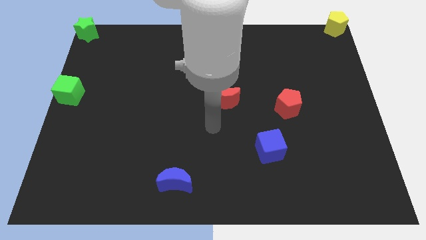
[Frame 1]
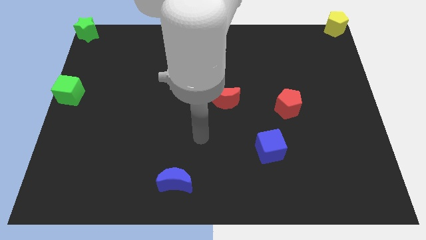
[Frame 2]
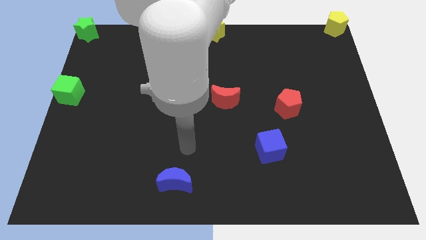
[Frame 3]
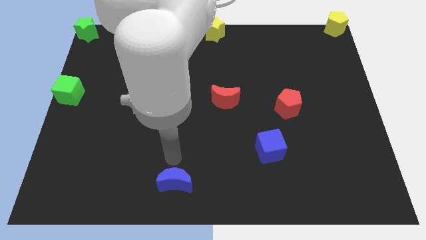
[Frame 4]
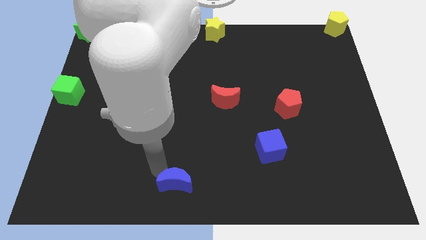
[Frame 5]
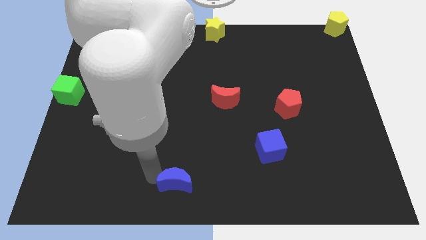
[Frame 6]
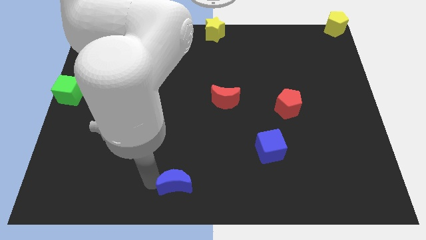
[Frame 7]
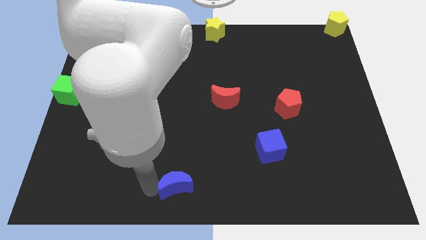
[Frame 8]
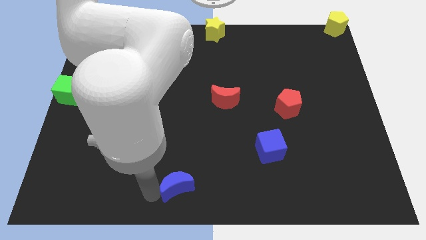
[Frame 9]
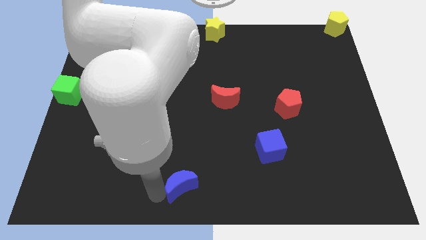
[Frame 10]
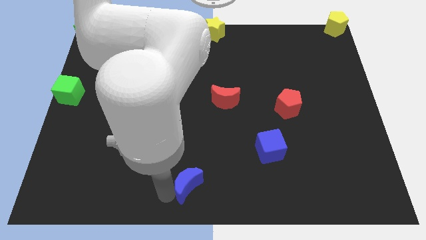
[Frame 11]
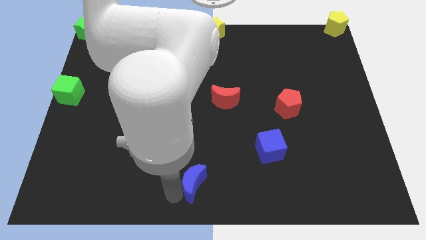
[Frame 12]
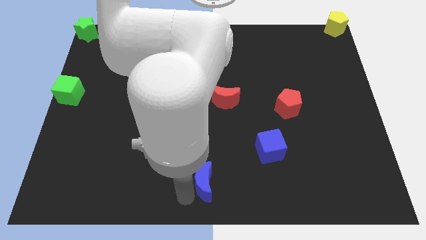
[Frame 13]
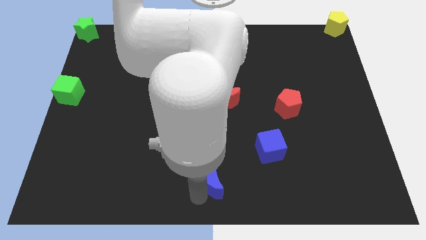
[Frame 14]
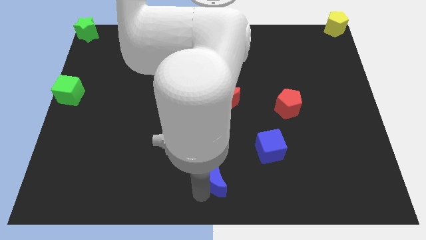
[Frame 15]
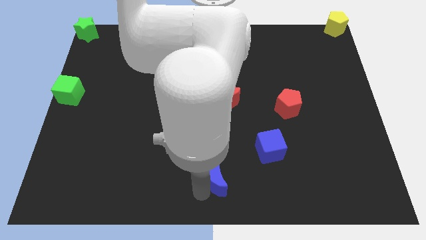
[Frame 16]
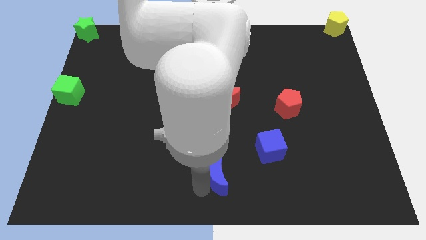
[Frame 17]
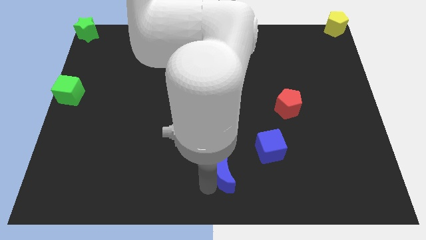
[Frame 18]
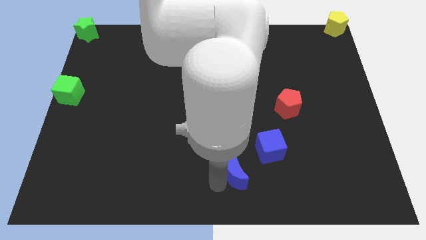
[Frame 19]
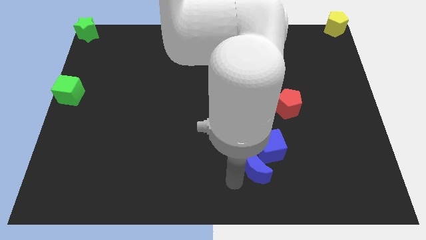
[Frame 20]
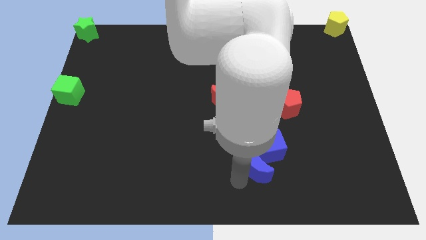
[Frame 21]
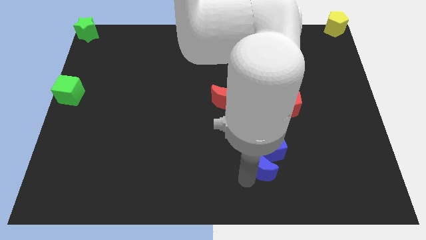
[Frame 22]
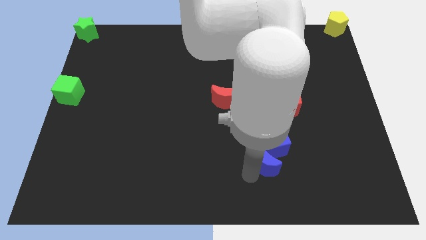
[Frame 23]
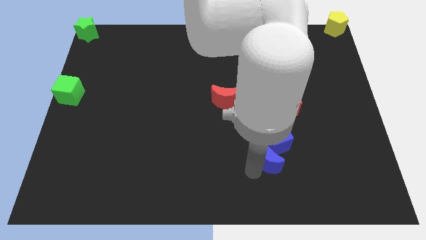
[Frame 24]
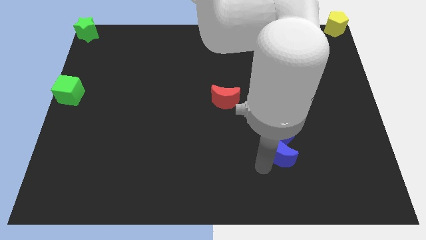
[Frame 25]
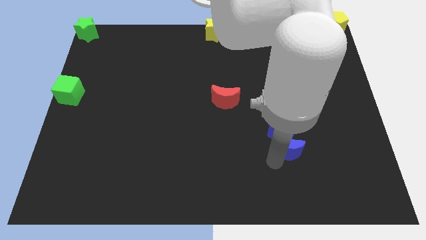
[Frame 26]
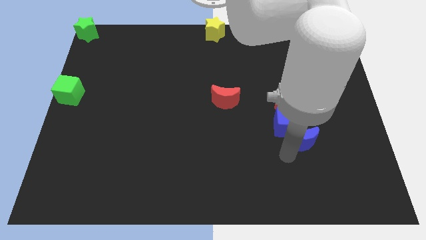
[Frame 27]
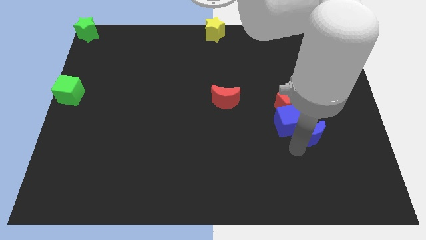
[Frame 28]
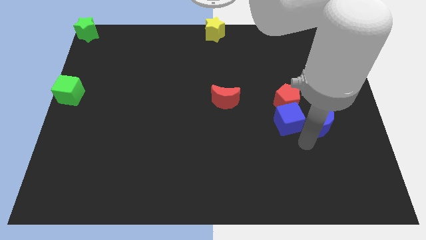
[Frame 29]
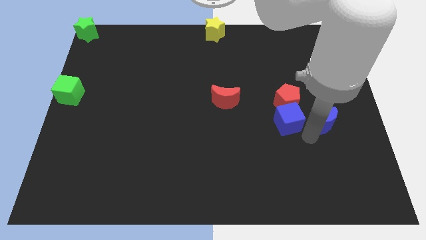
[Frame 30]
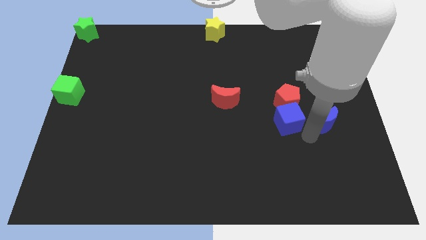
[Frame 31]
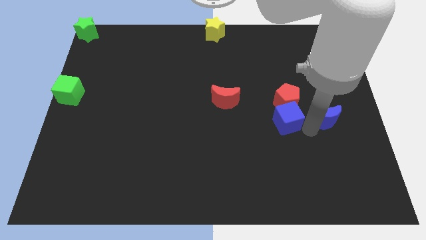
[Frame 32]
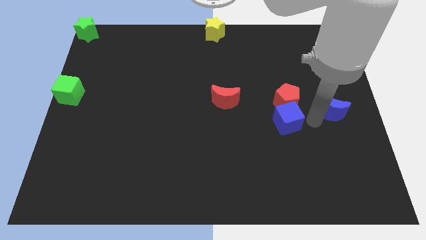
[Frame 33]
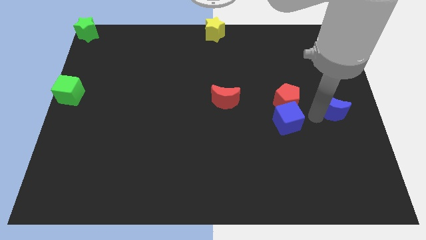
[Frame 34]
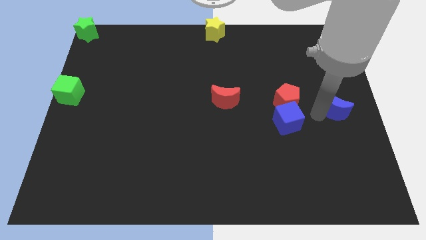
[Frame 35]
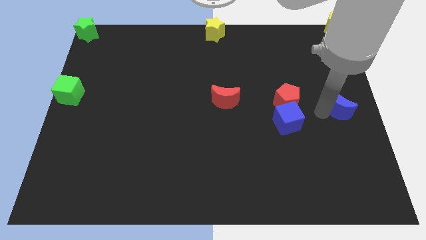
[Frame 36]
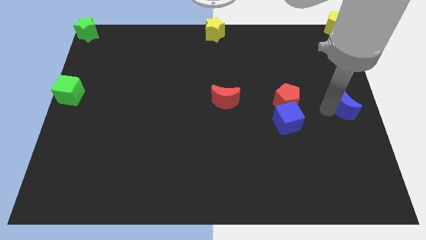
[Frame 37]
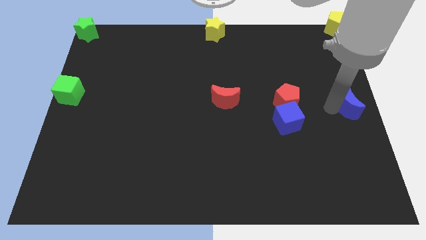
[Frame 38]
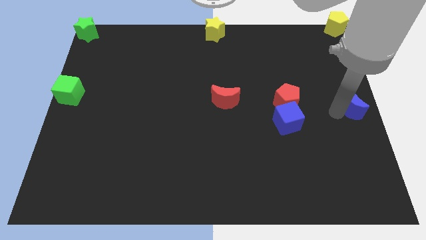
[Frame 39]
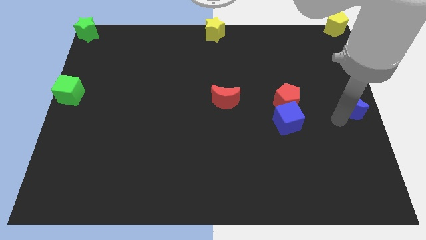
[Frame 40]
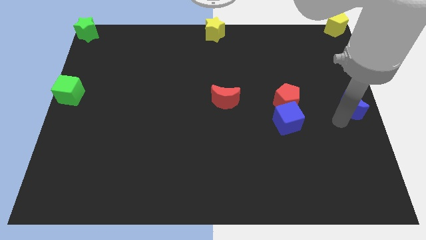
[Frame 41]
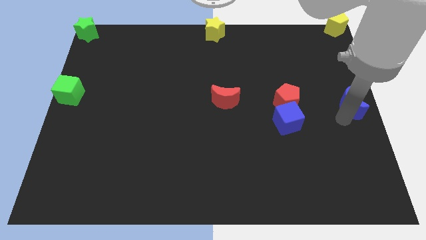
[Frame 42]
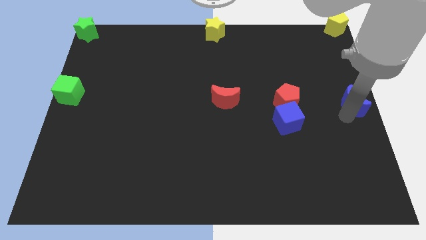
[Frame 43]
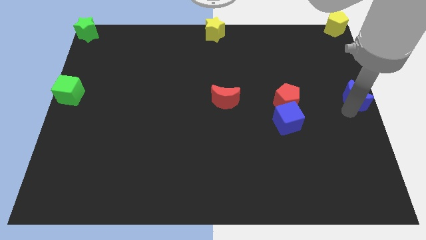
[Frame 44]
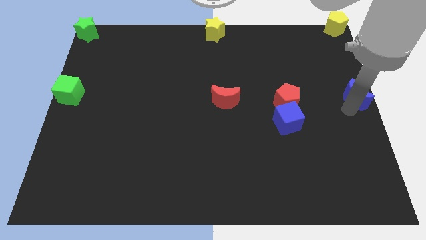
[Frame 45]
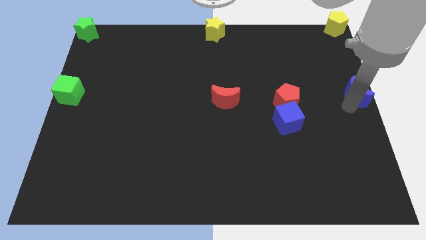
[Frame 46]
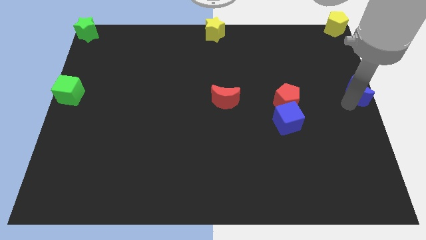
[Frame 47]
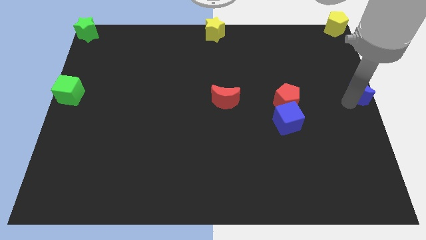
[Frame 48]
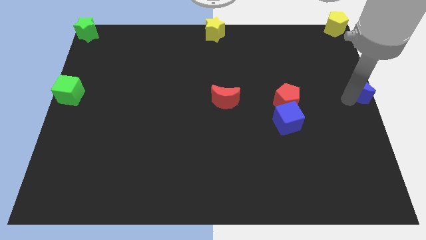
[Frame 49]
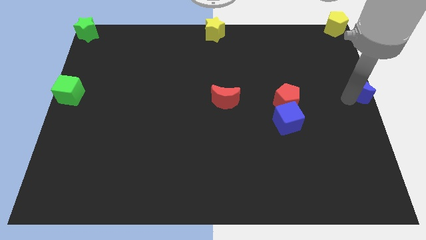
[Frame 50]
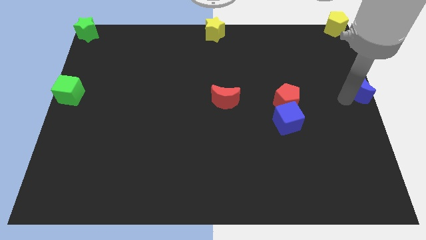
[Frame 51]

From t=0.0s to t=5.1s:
push blue moon to right center of the board

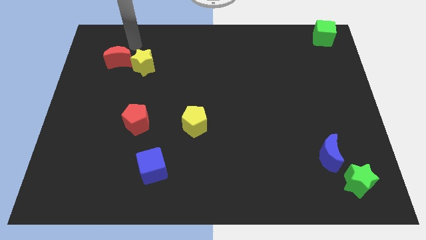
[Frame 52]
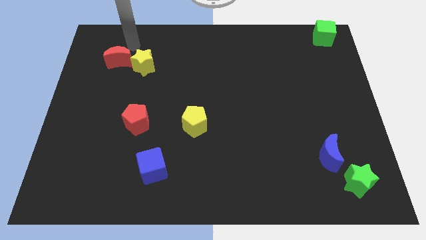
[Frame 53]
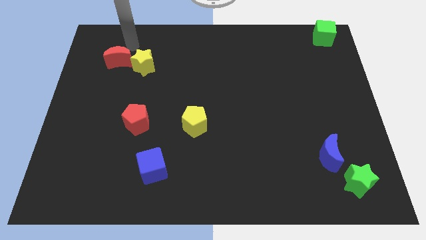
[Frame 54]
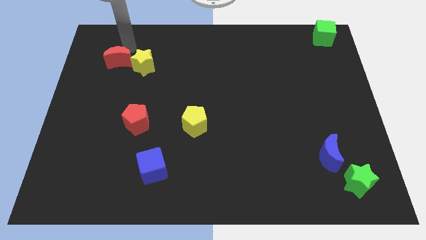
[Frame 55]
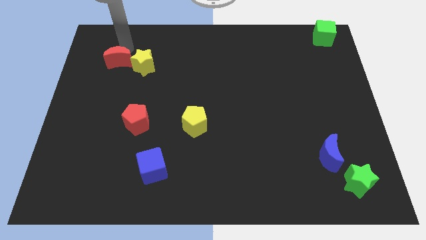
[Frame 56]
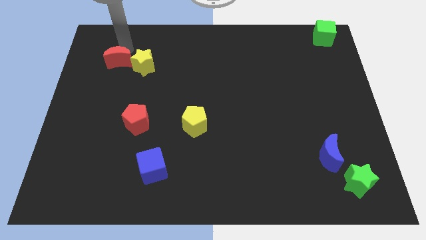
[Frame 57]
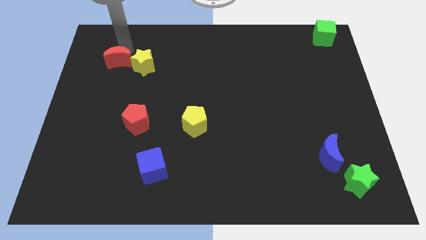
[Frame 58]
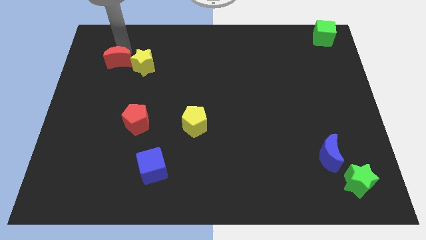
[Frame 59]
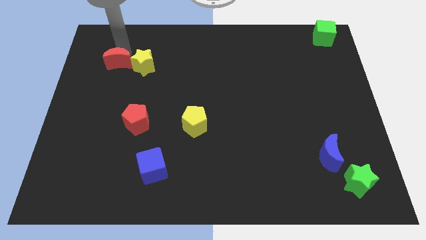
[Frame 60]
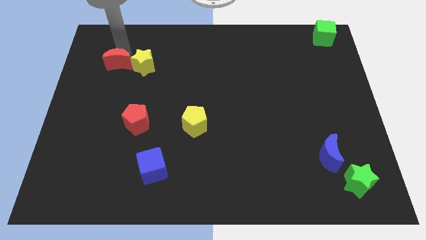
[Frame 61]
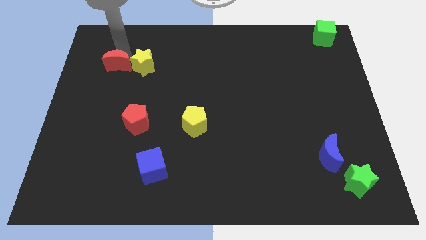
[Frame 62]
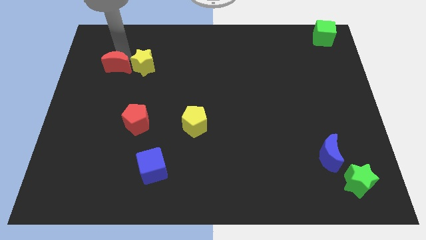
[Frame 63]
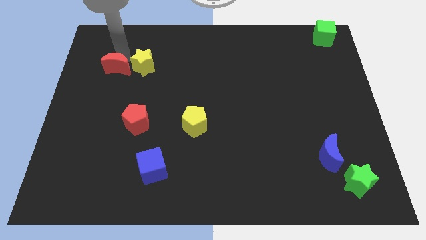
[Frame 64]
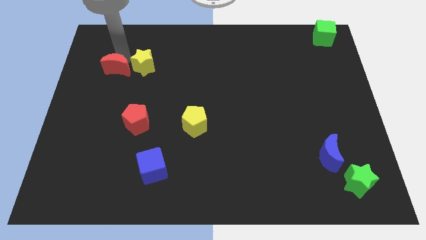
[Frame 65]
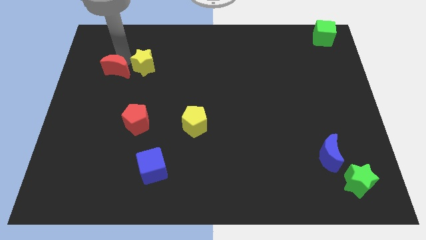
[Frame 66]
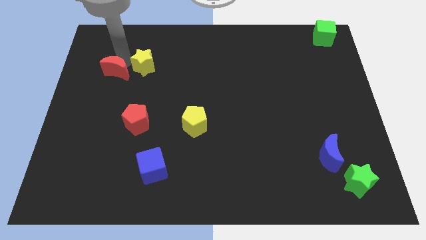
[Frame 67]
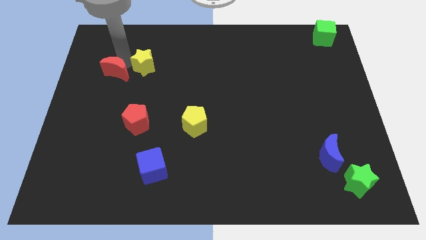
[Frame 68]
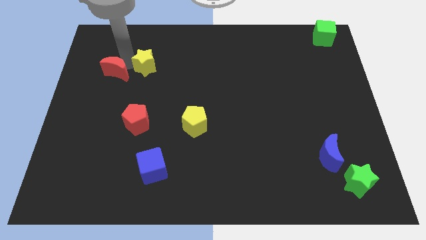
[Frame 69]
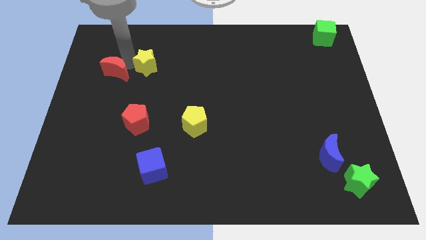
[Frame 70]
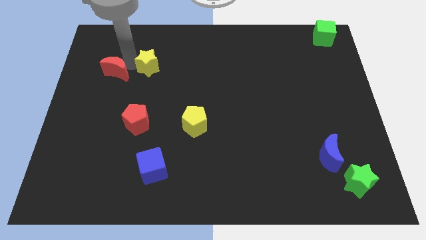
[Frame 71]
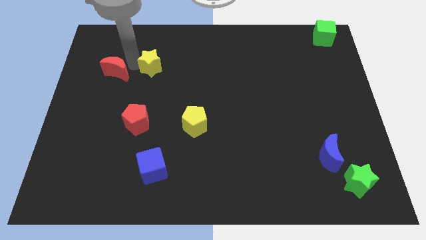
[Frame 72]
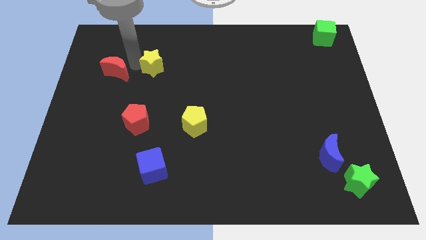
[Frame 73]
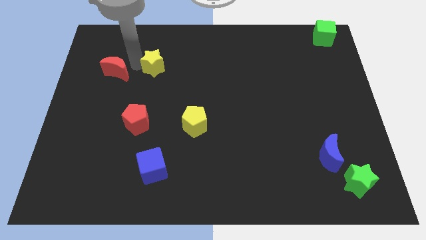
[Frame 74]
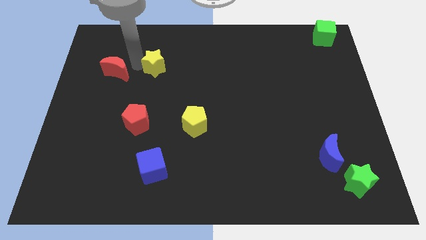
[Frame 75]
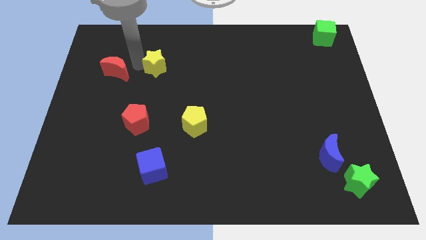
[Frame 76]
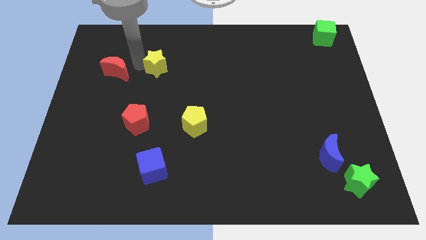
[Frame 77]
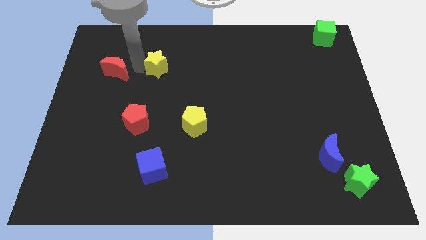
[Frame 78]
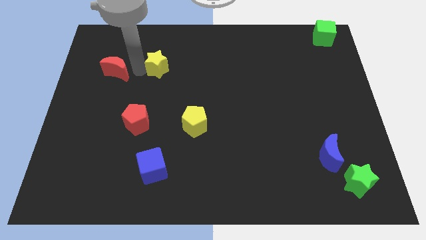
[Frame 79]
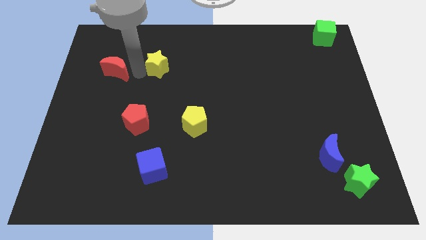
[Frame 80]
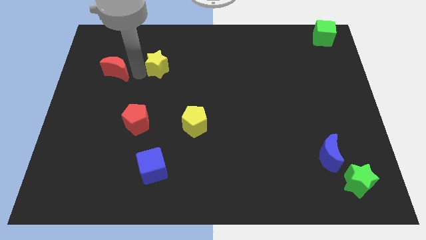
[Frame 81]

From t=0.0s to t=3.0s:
push red moon slightly

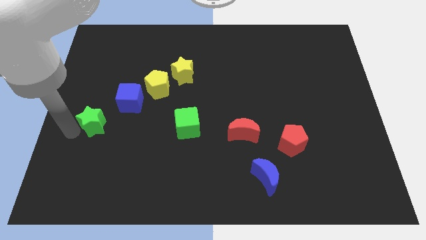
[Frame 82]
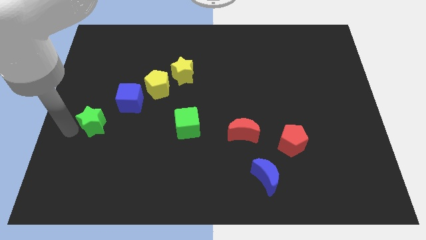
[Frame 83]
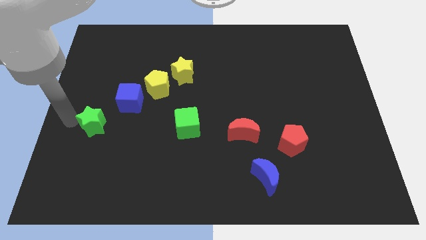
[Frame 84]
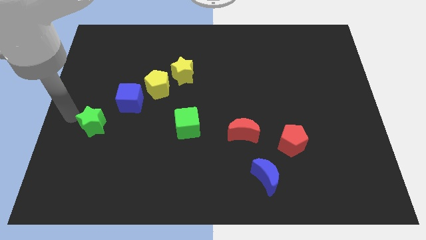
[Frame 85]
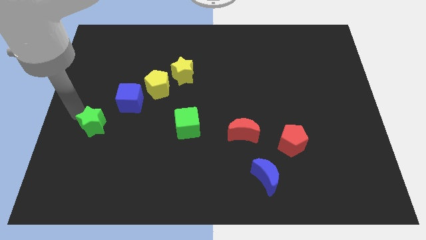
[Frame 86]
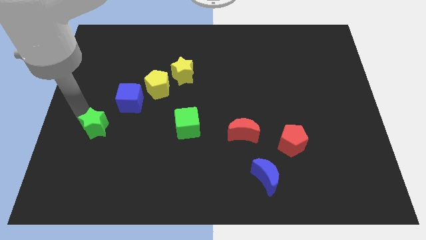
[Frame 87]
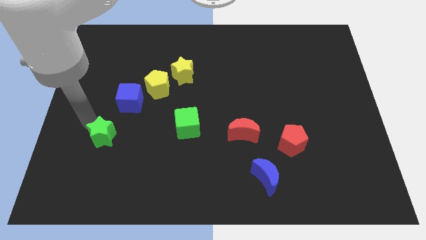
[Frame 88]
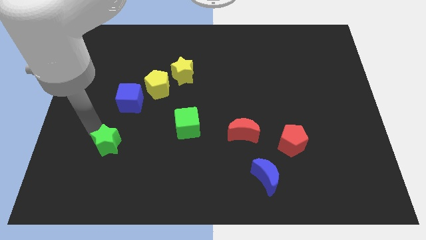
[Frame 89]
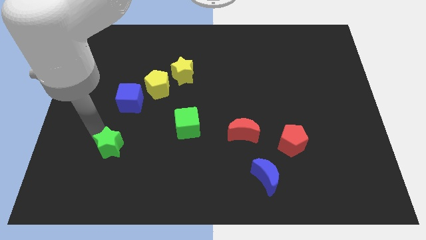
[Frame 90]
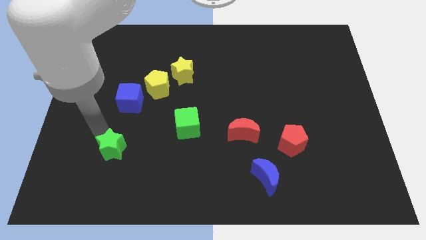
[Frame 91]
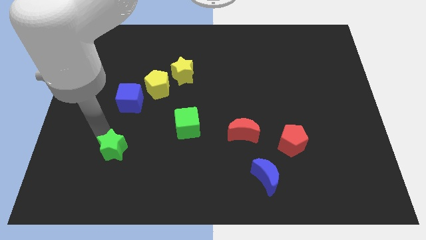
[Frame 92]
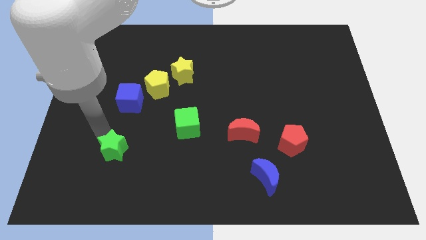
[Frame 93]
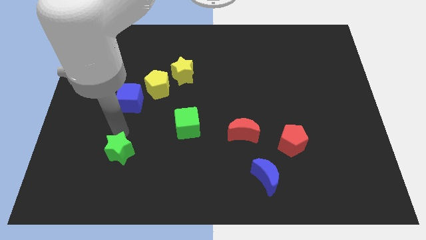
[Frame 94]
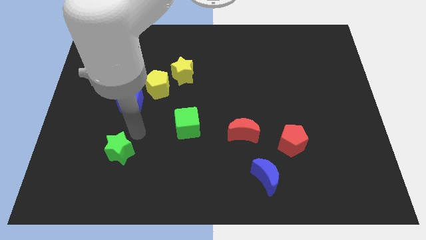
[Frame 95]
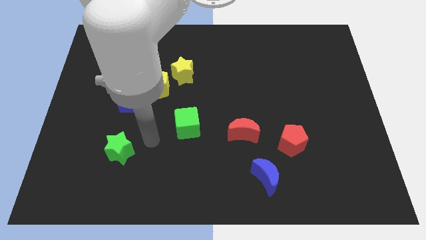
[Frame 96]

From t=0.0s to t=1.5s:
push the green star to the bottom of the blue cube
